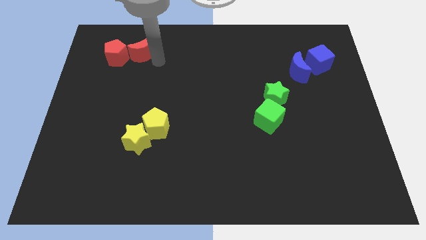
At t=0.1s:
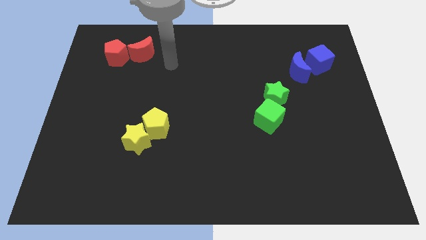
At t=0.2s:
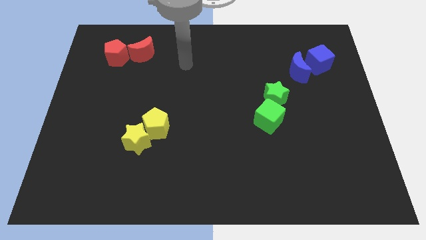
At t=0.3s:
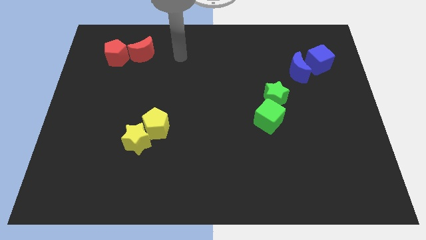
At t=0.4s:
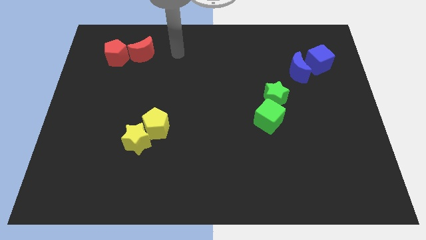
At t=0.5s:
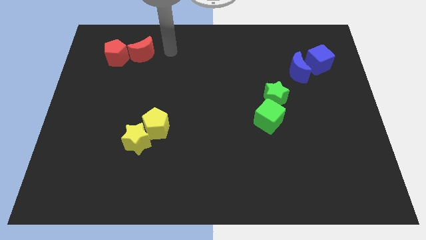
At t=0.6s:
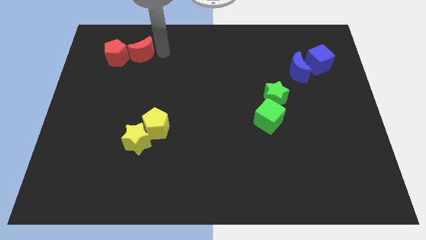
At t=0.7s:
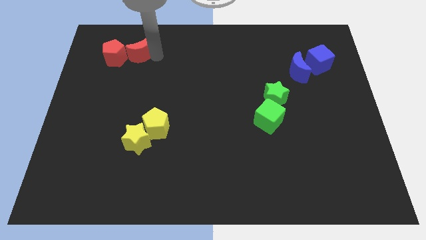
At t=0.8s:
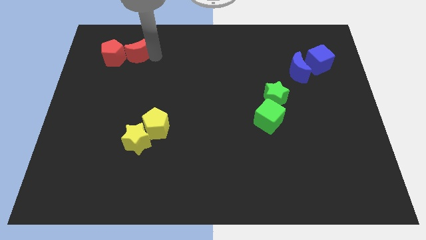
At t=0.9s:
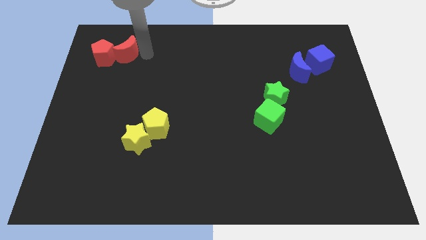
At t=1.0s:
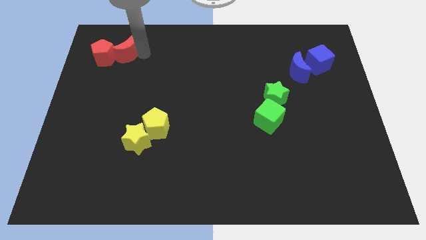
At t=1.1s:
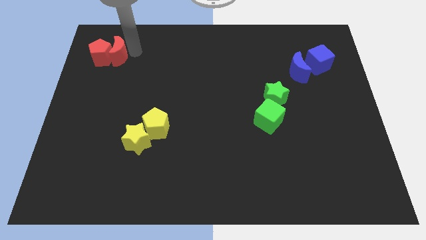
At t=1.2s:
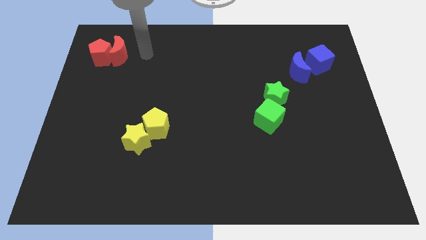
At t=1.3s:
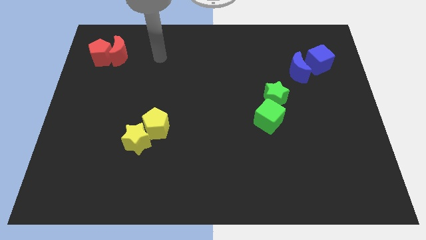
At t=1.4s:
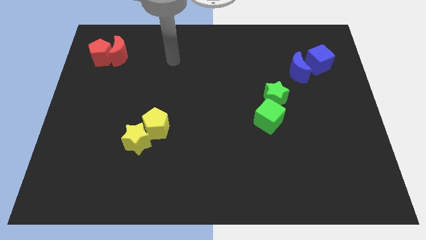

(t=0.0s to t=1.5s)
push the red blocks to the left side of the table

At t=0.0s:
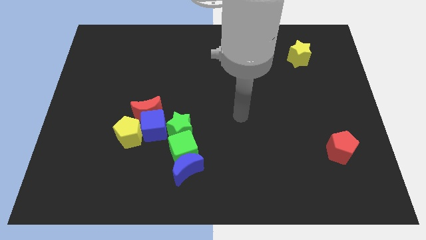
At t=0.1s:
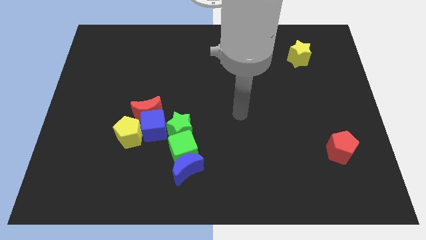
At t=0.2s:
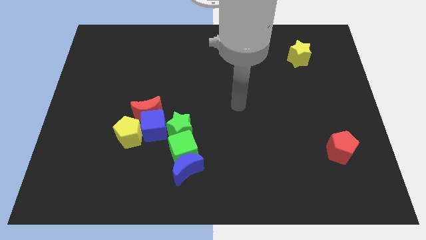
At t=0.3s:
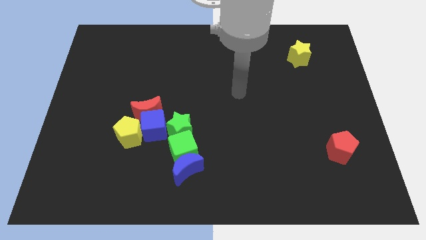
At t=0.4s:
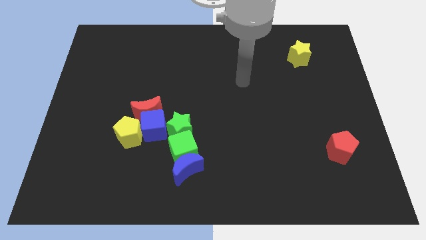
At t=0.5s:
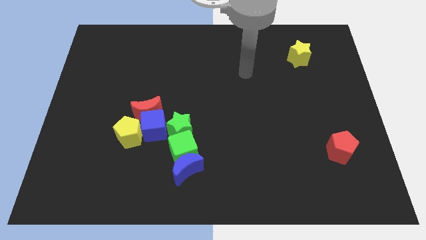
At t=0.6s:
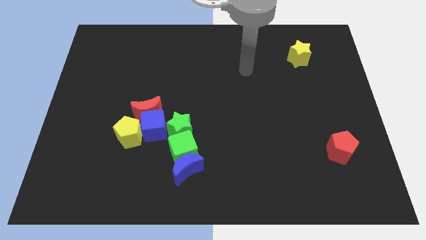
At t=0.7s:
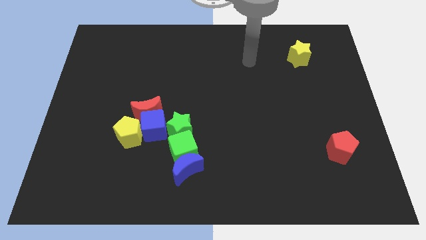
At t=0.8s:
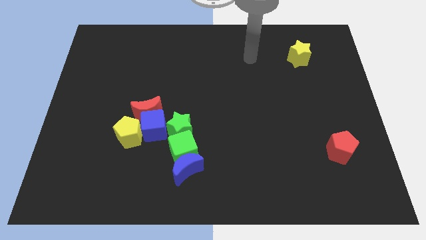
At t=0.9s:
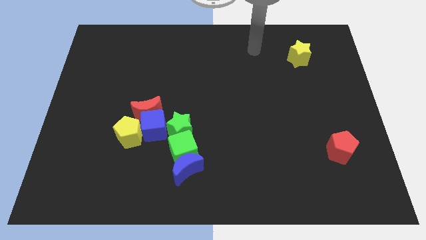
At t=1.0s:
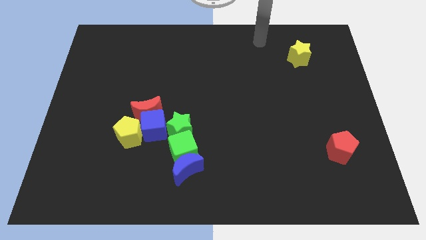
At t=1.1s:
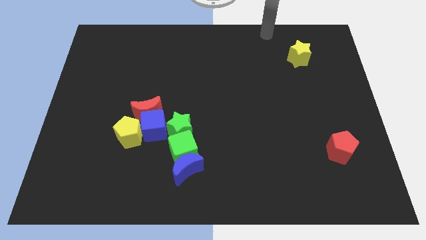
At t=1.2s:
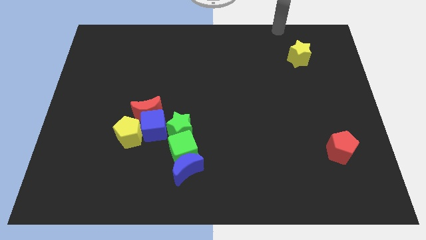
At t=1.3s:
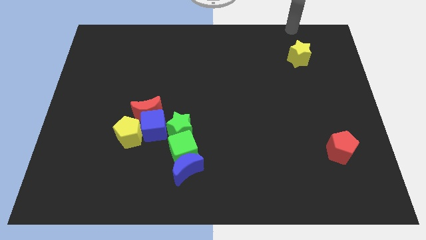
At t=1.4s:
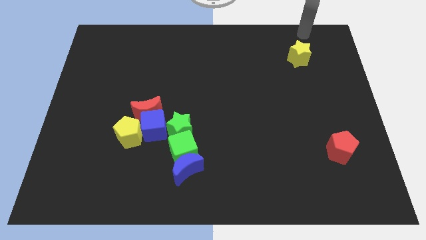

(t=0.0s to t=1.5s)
point your arm at the top of the yellow star

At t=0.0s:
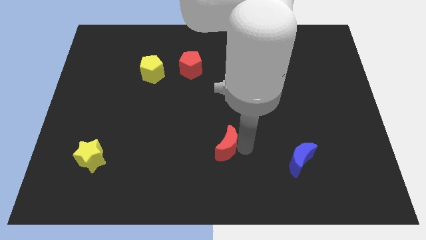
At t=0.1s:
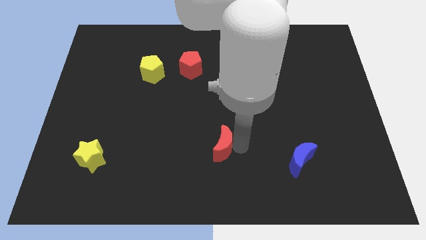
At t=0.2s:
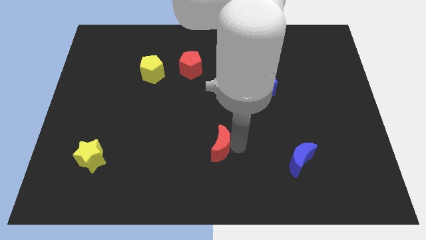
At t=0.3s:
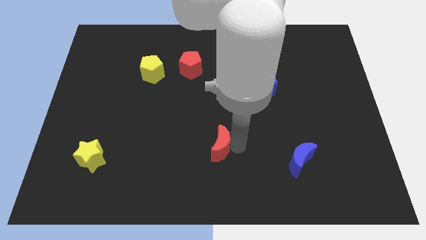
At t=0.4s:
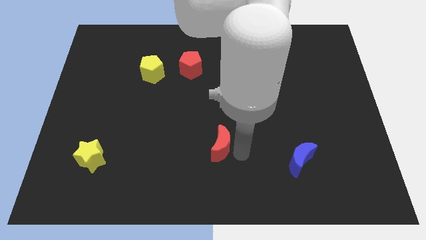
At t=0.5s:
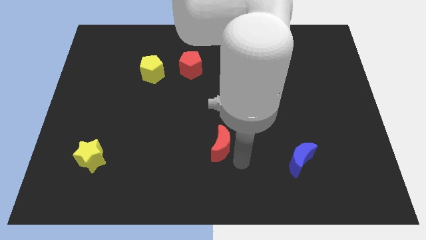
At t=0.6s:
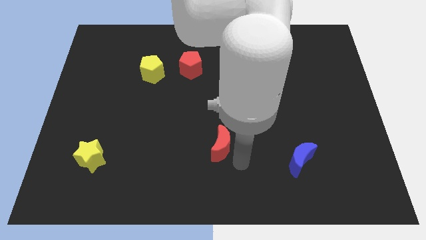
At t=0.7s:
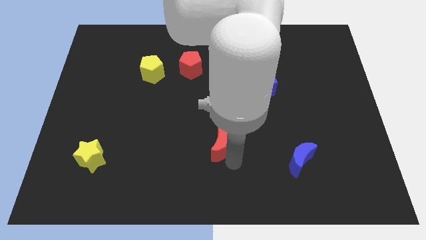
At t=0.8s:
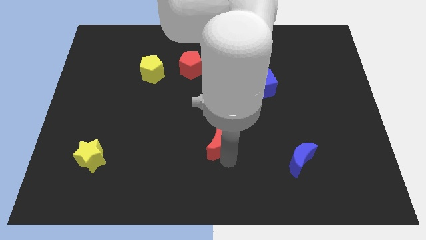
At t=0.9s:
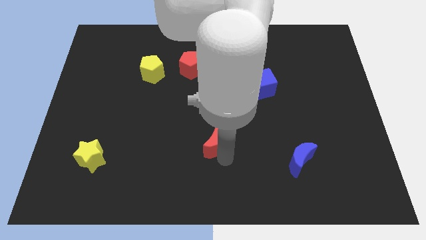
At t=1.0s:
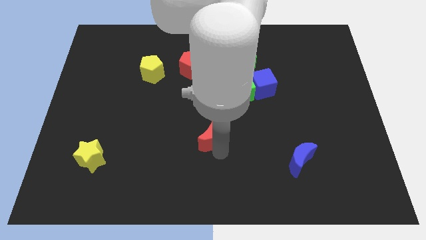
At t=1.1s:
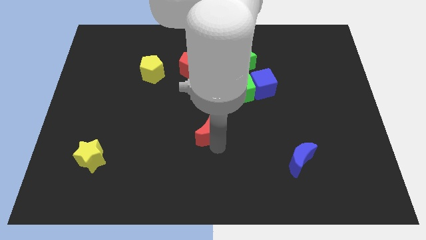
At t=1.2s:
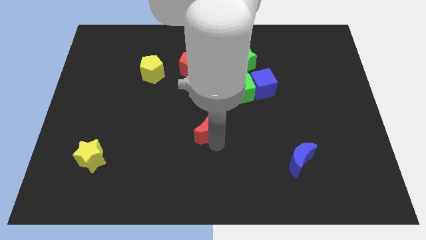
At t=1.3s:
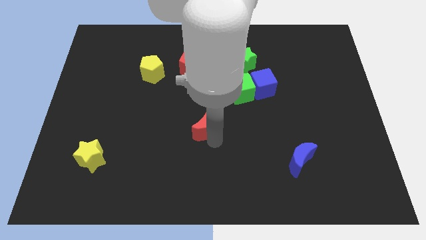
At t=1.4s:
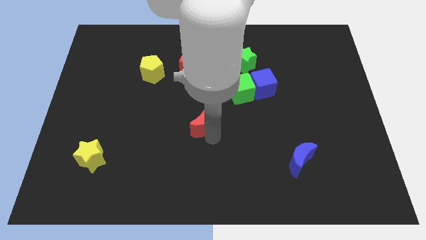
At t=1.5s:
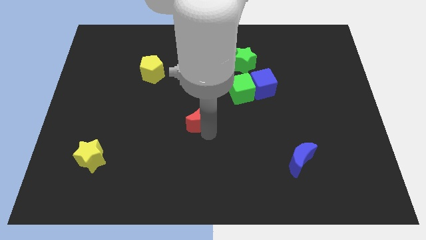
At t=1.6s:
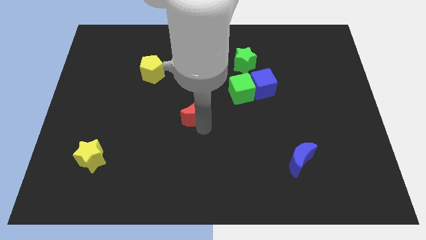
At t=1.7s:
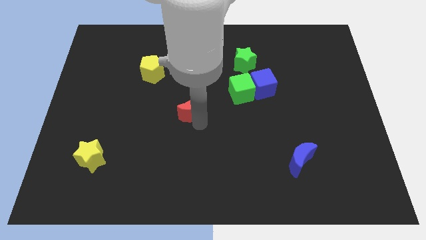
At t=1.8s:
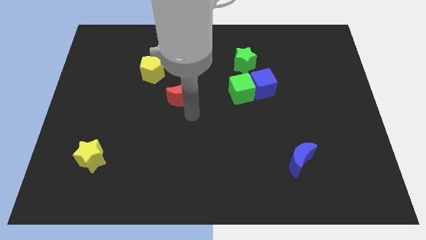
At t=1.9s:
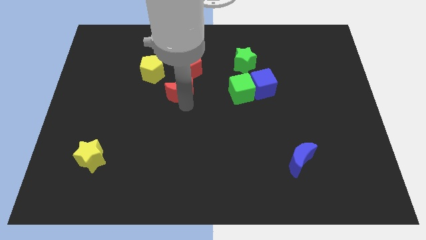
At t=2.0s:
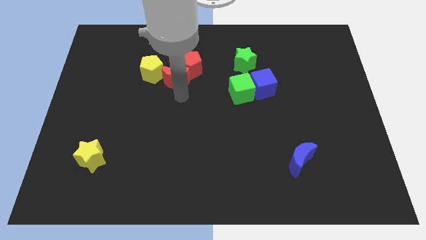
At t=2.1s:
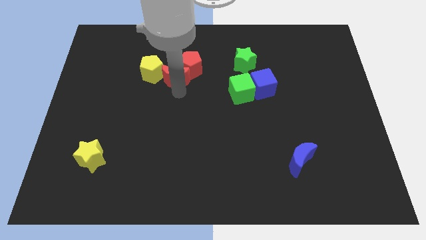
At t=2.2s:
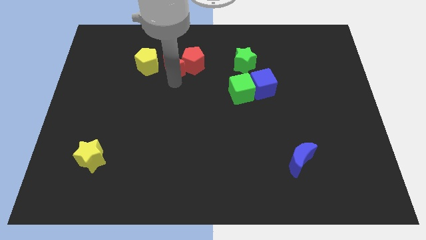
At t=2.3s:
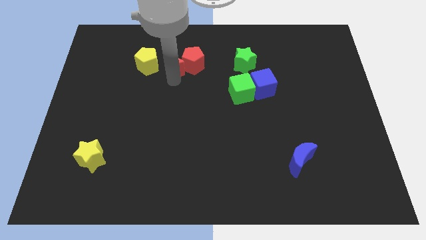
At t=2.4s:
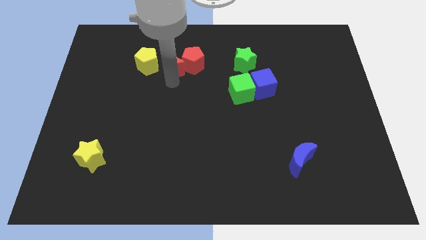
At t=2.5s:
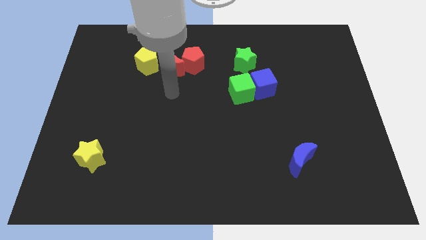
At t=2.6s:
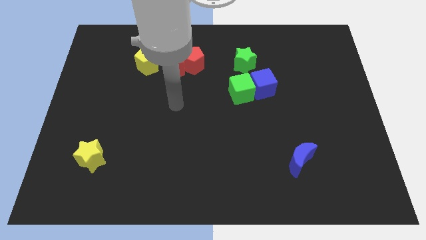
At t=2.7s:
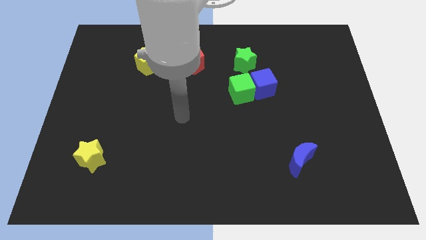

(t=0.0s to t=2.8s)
move the red moon to the left side of the red pentagon

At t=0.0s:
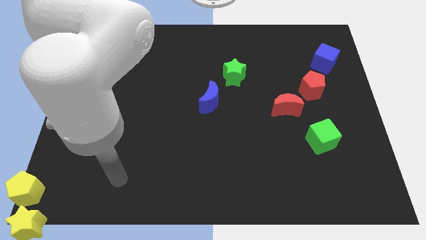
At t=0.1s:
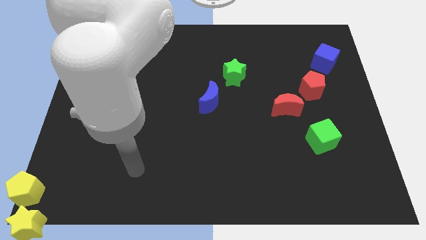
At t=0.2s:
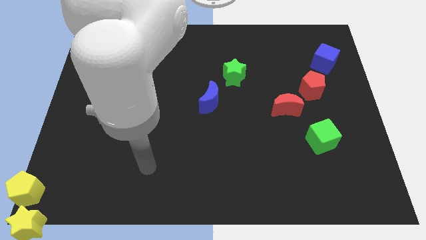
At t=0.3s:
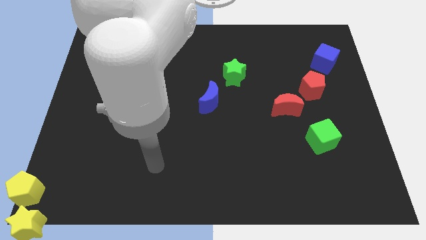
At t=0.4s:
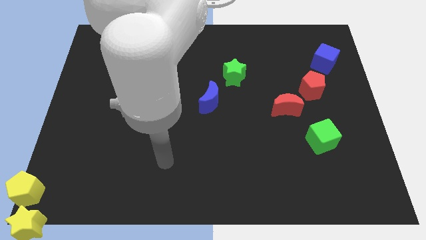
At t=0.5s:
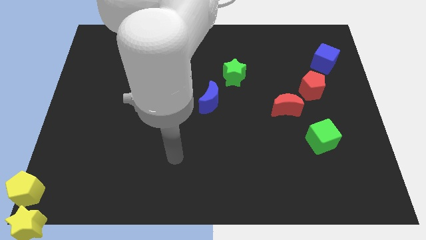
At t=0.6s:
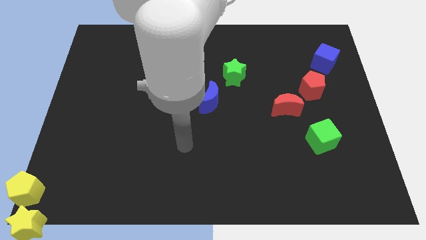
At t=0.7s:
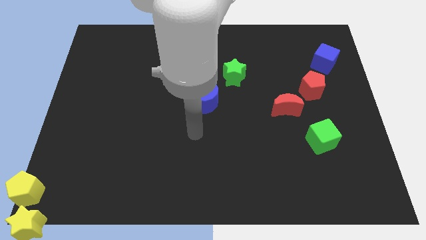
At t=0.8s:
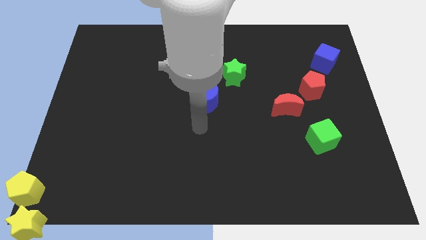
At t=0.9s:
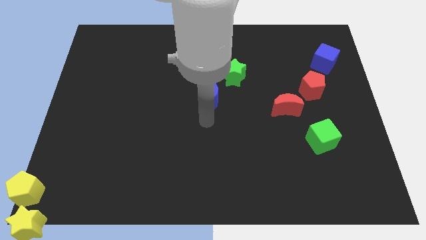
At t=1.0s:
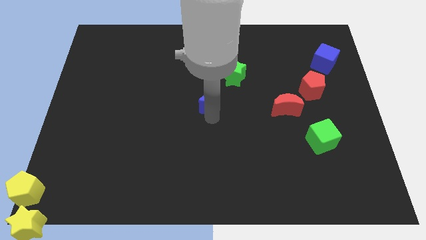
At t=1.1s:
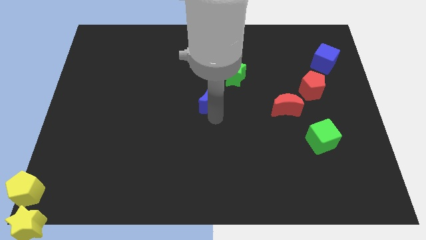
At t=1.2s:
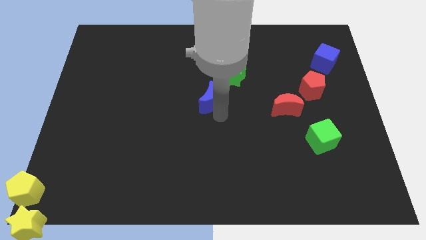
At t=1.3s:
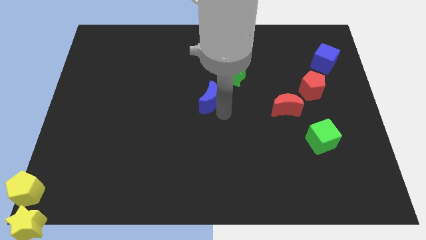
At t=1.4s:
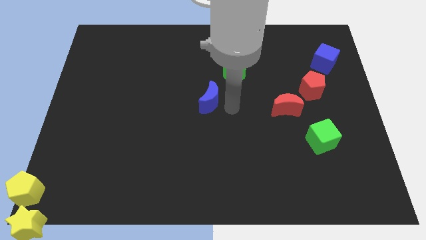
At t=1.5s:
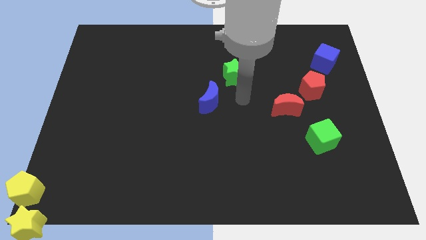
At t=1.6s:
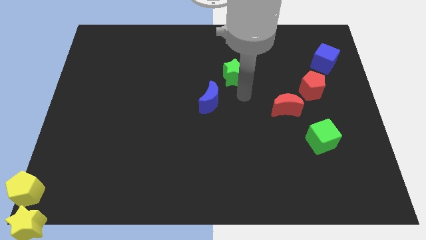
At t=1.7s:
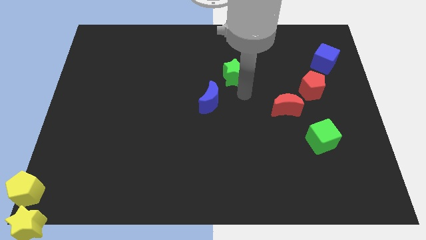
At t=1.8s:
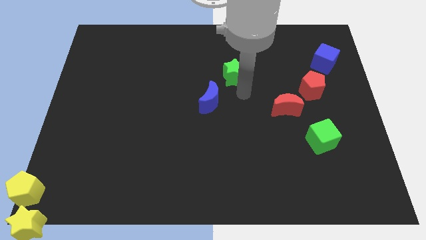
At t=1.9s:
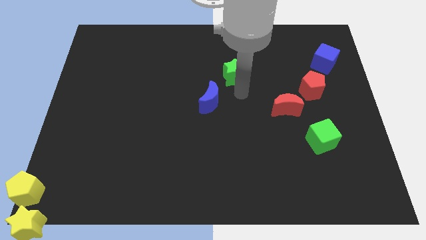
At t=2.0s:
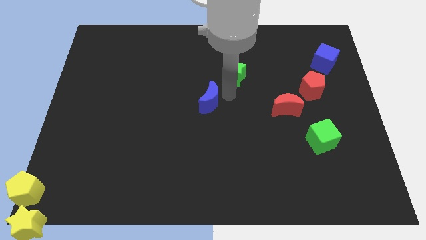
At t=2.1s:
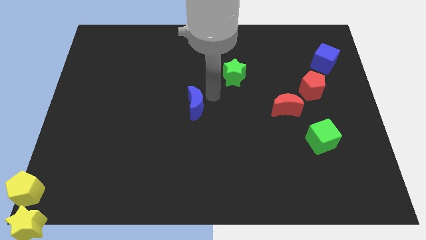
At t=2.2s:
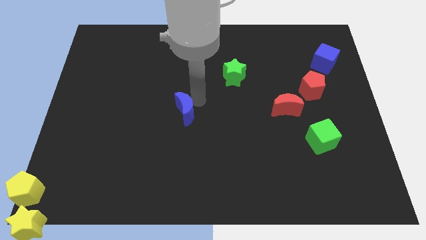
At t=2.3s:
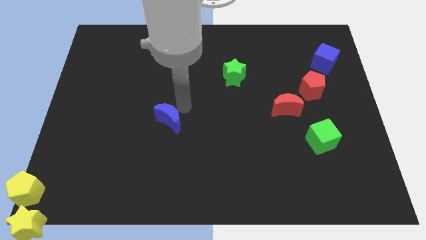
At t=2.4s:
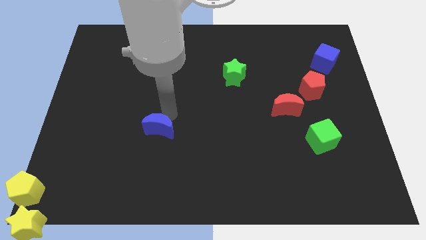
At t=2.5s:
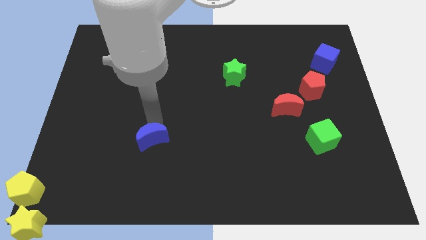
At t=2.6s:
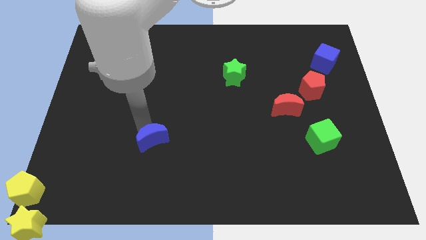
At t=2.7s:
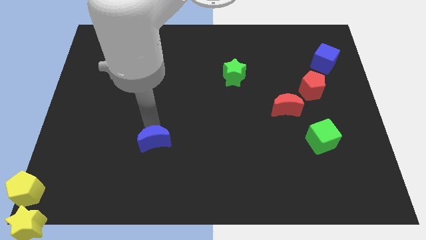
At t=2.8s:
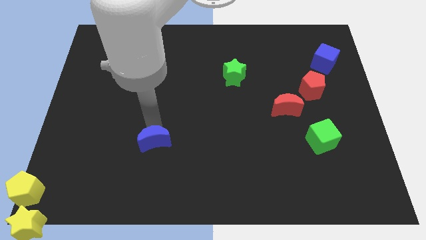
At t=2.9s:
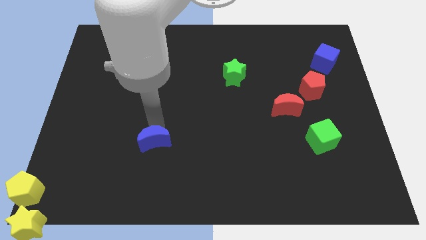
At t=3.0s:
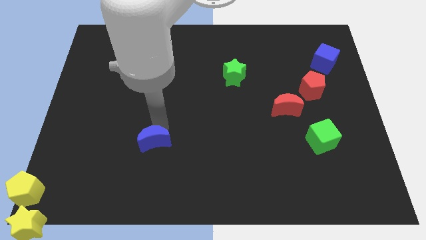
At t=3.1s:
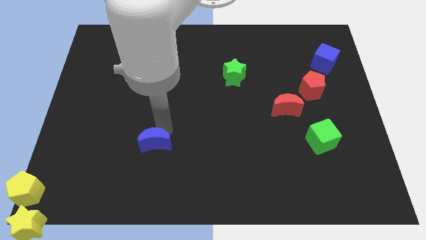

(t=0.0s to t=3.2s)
push the blue moon slightly downwards
